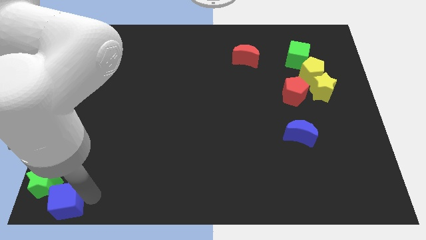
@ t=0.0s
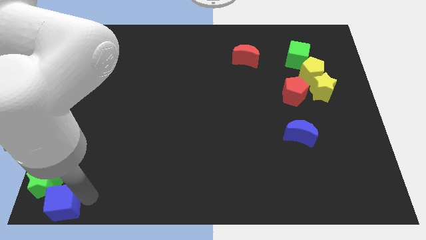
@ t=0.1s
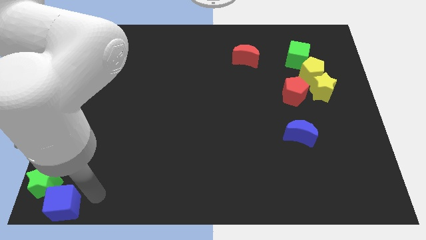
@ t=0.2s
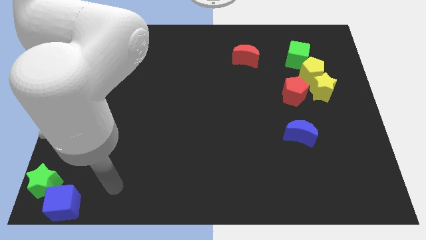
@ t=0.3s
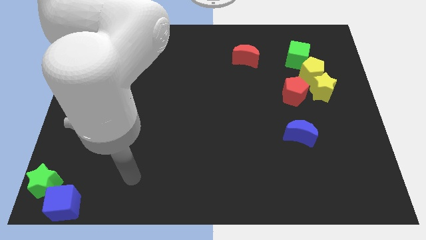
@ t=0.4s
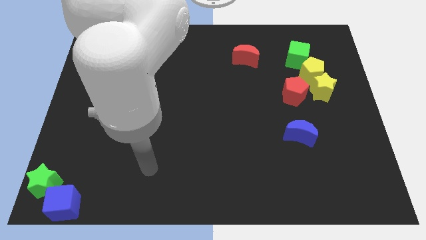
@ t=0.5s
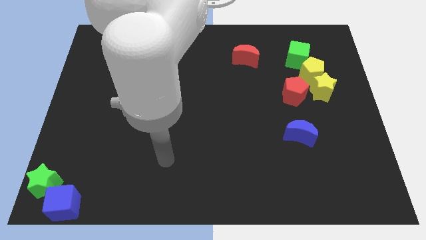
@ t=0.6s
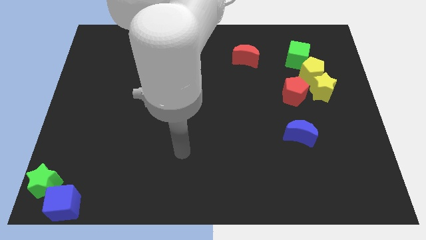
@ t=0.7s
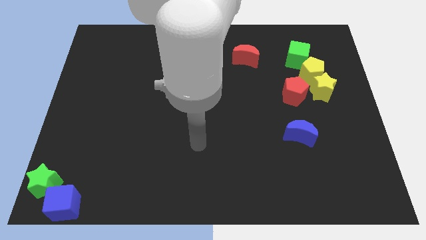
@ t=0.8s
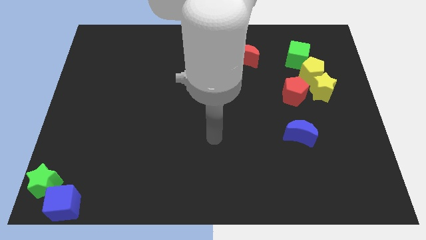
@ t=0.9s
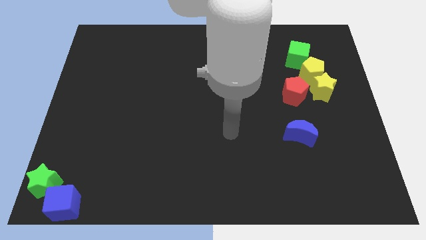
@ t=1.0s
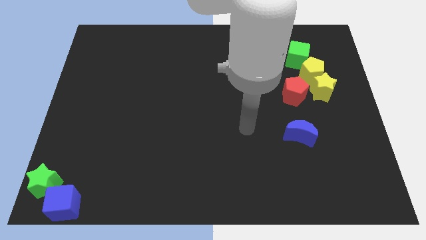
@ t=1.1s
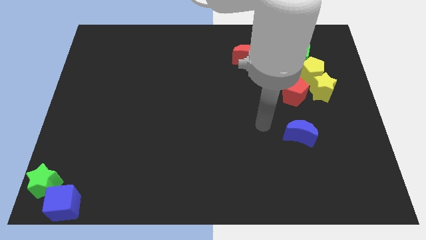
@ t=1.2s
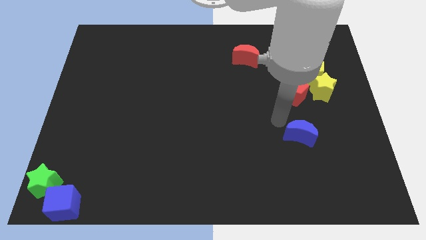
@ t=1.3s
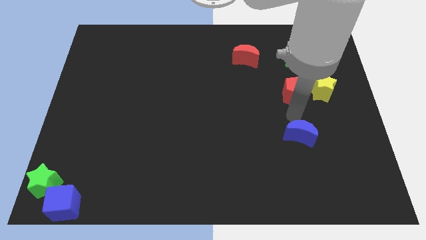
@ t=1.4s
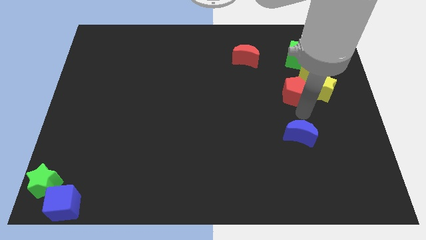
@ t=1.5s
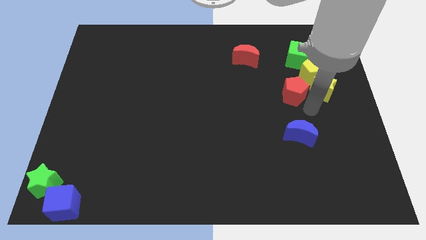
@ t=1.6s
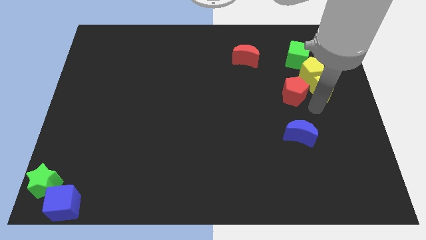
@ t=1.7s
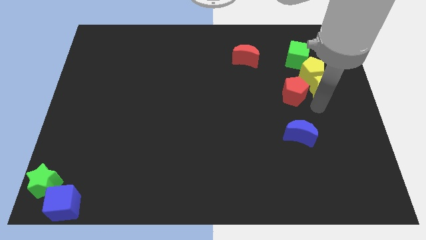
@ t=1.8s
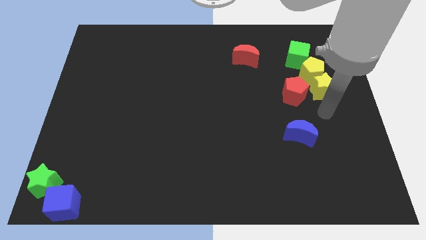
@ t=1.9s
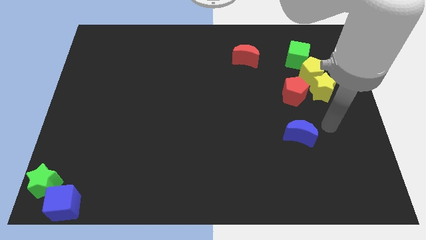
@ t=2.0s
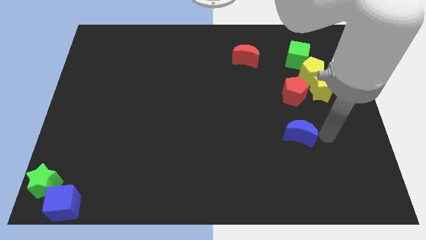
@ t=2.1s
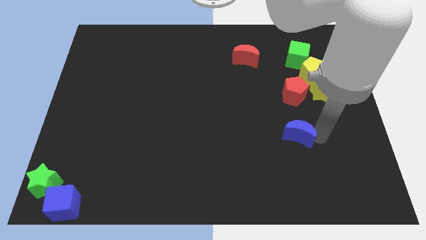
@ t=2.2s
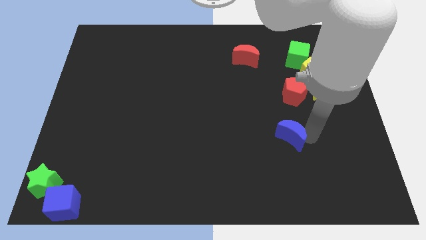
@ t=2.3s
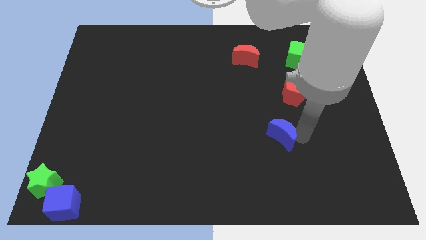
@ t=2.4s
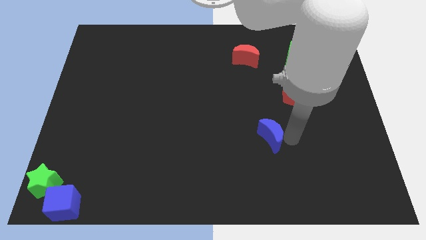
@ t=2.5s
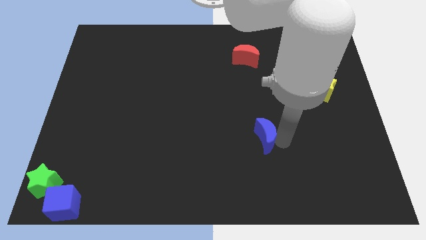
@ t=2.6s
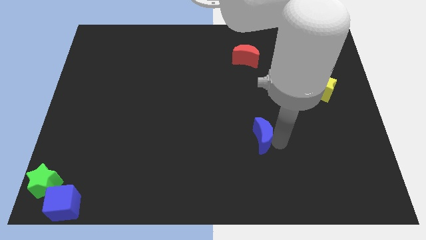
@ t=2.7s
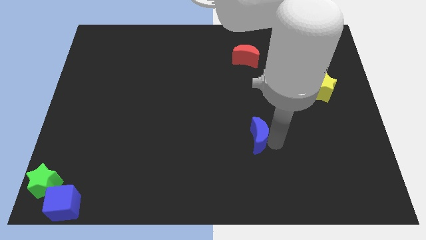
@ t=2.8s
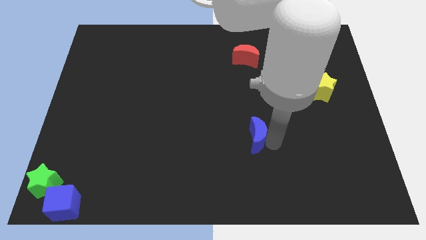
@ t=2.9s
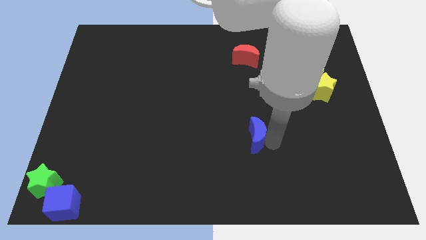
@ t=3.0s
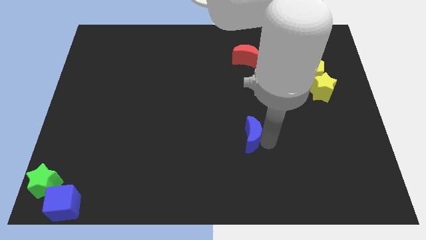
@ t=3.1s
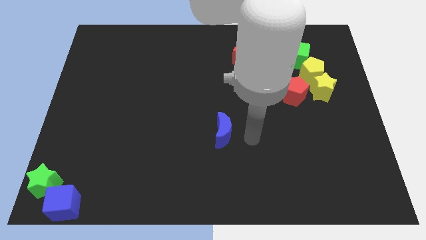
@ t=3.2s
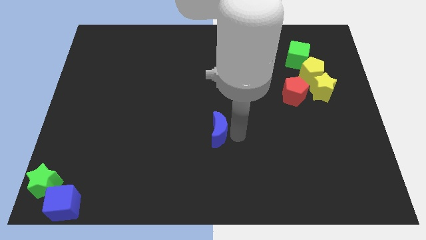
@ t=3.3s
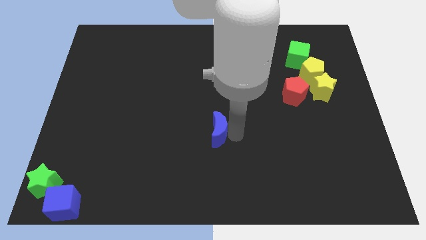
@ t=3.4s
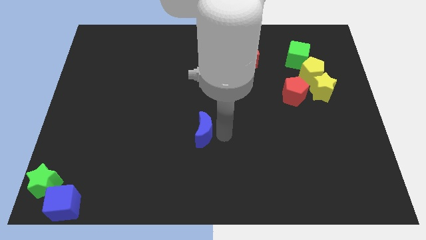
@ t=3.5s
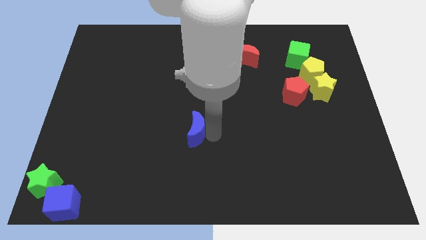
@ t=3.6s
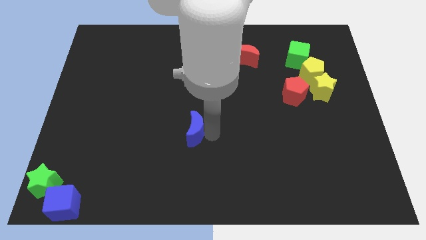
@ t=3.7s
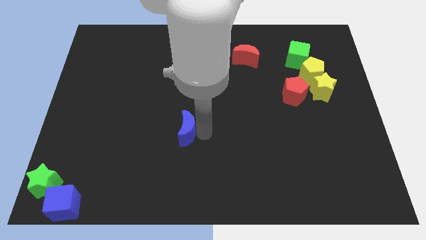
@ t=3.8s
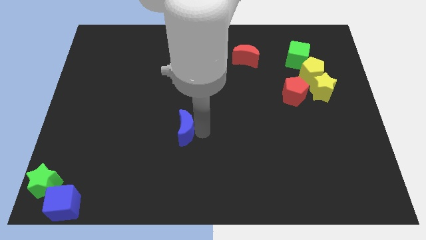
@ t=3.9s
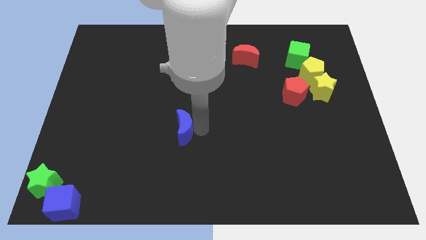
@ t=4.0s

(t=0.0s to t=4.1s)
push the blue crescent towards the left bottom of the board

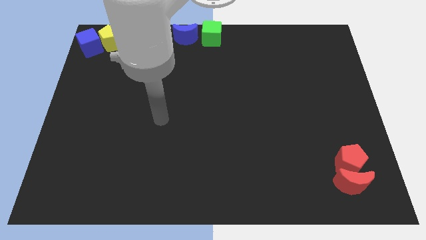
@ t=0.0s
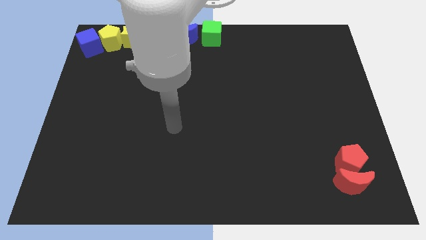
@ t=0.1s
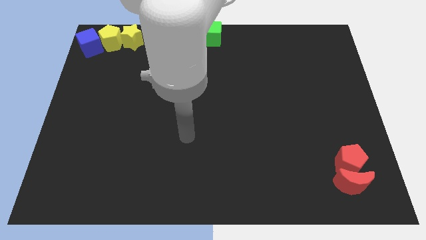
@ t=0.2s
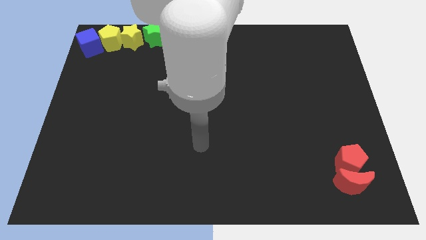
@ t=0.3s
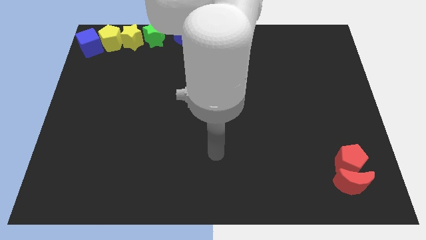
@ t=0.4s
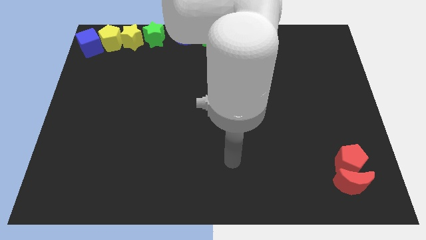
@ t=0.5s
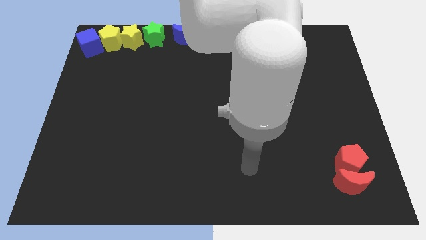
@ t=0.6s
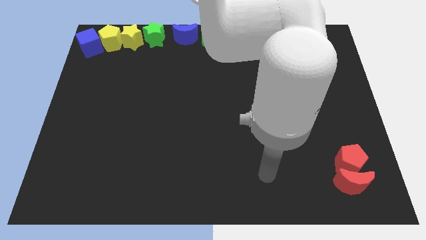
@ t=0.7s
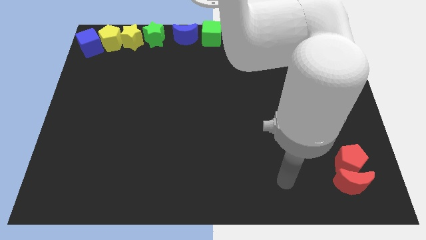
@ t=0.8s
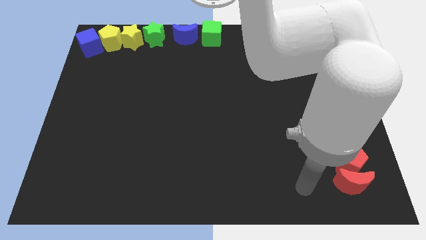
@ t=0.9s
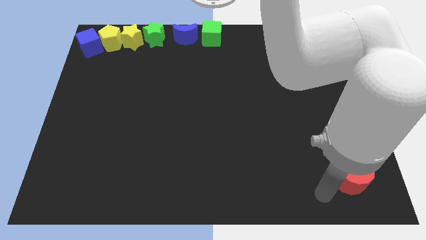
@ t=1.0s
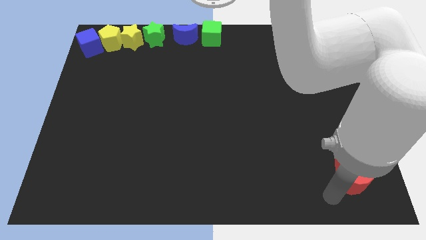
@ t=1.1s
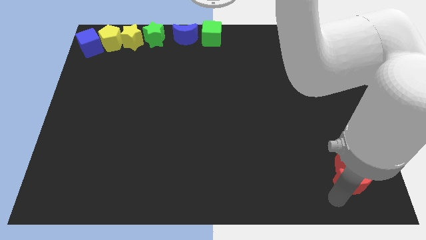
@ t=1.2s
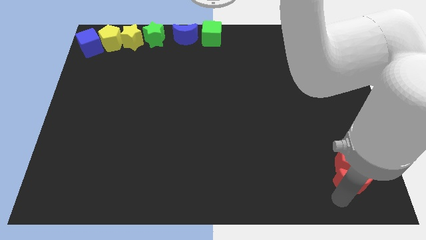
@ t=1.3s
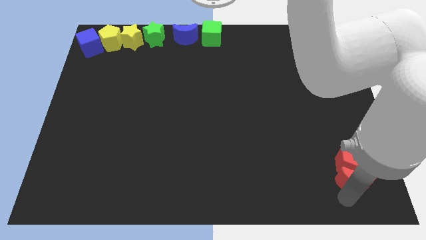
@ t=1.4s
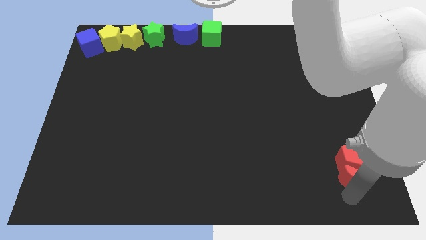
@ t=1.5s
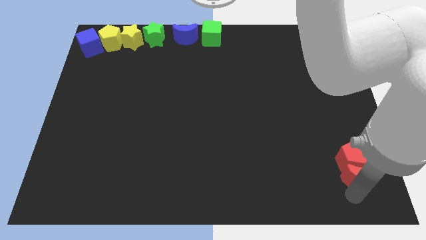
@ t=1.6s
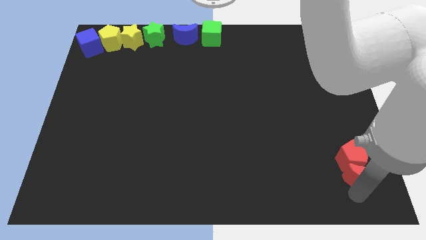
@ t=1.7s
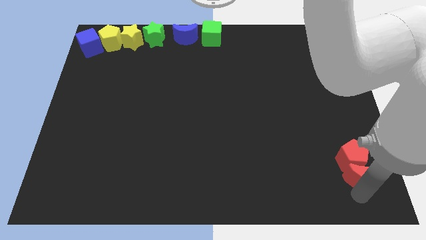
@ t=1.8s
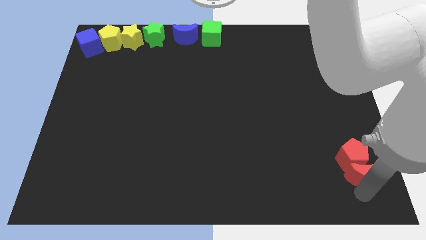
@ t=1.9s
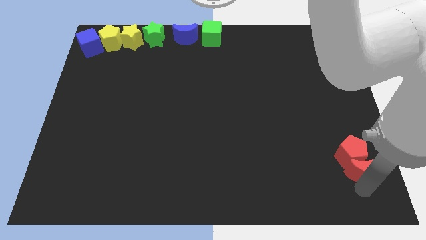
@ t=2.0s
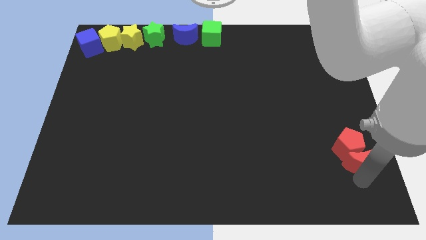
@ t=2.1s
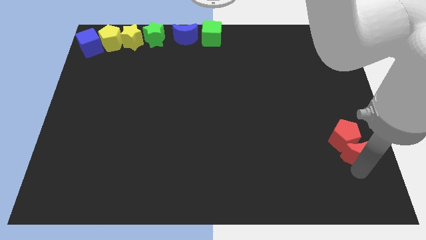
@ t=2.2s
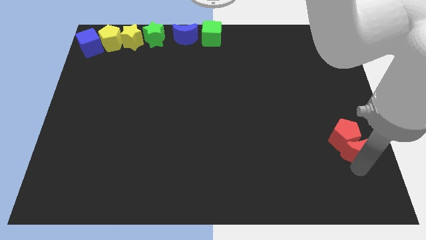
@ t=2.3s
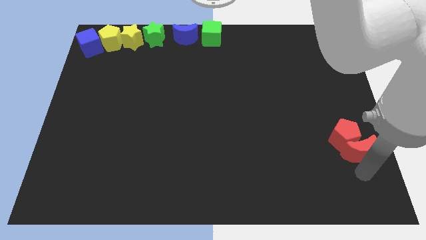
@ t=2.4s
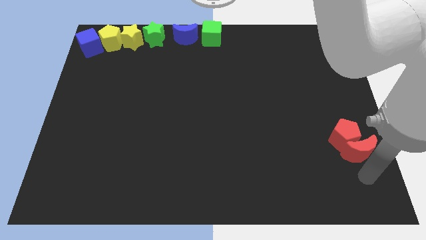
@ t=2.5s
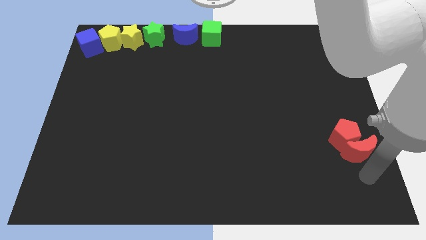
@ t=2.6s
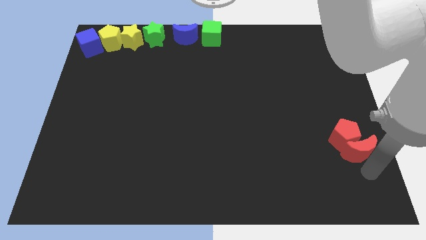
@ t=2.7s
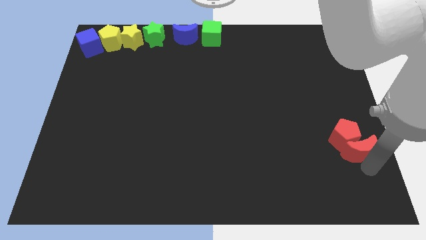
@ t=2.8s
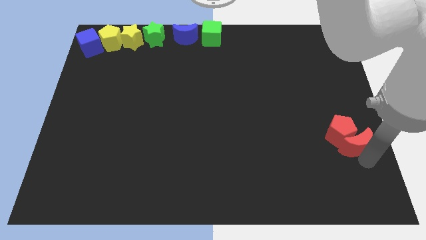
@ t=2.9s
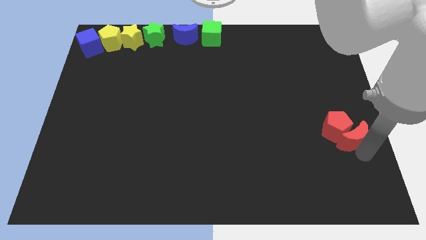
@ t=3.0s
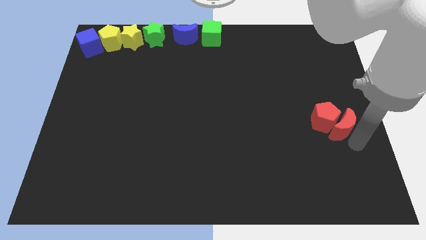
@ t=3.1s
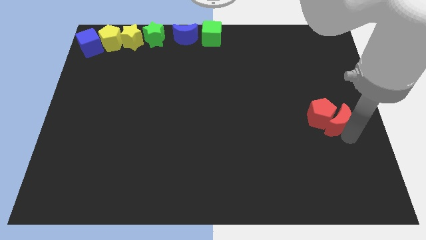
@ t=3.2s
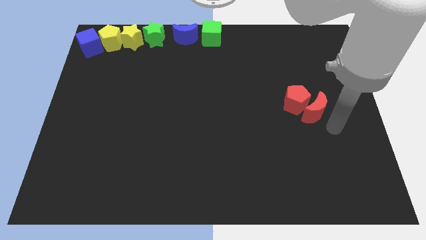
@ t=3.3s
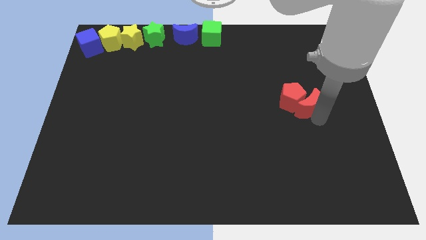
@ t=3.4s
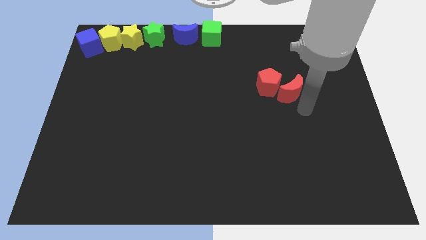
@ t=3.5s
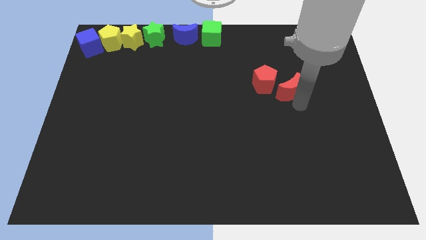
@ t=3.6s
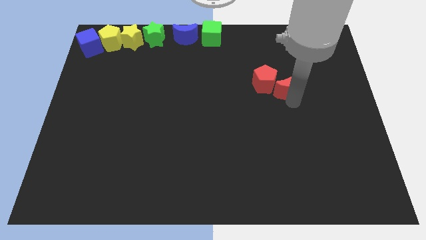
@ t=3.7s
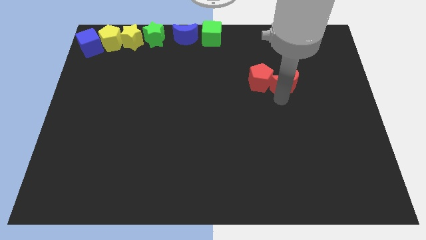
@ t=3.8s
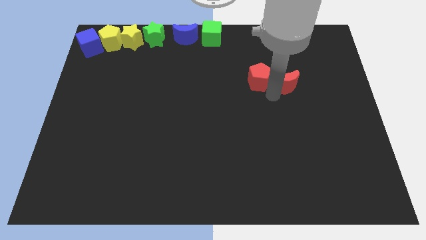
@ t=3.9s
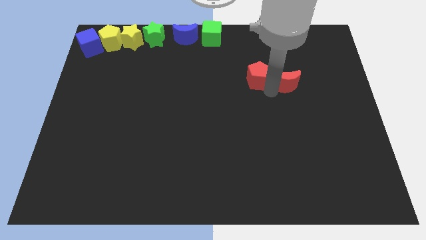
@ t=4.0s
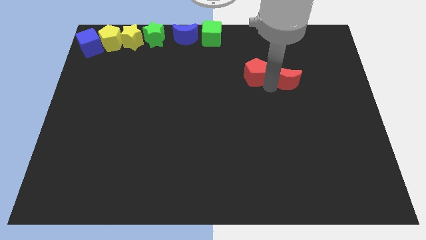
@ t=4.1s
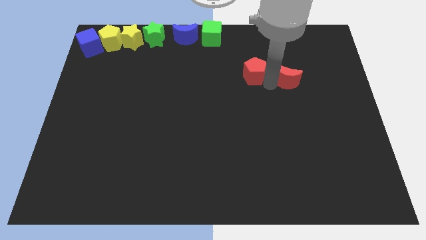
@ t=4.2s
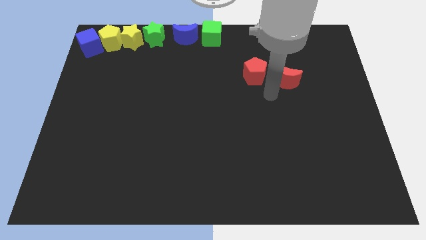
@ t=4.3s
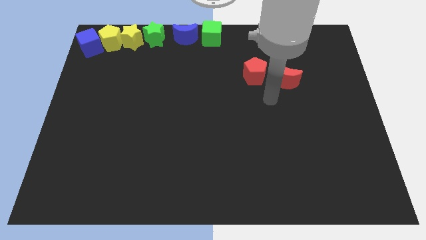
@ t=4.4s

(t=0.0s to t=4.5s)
push the red pentagon and crescent towards the line of blocks

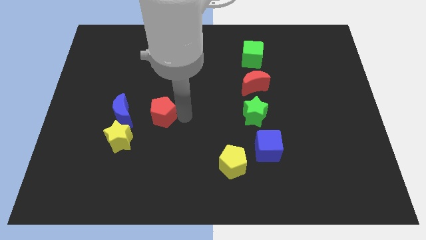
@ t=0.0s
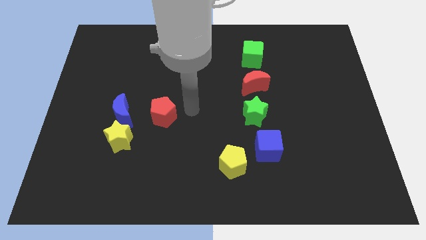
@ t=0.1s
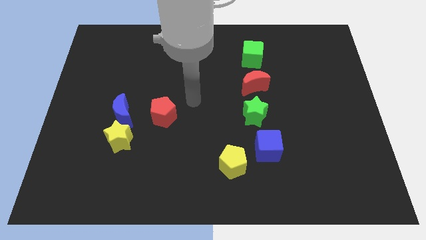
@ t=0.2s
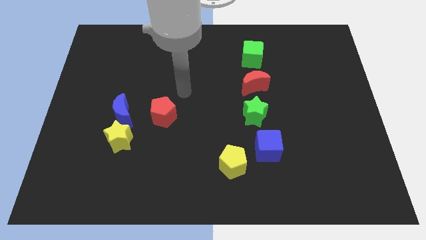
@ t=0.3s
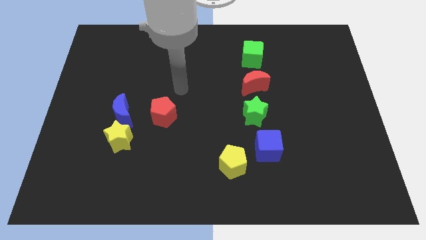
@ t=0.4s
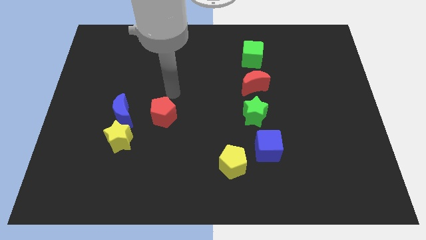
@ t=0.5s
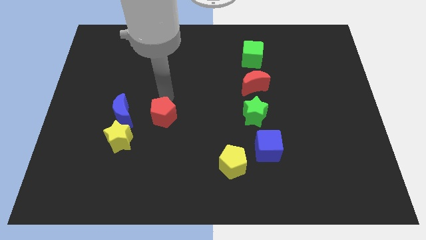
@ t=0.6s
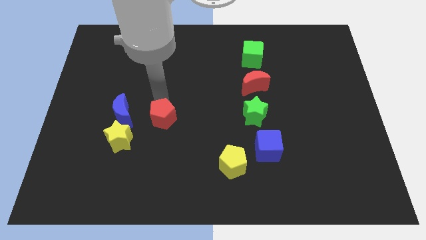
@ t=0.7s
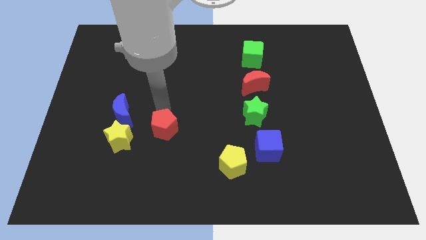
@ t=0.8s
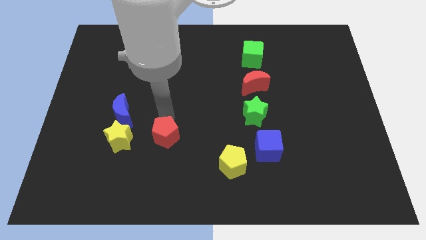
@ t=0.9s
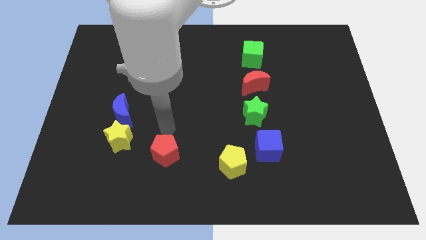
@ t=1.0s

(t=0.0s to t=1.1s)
slide the red pentagon to the right of yellow star
